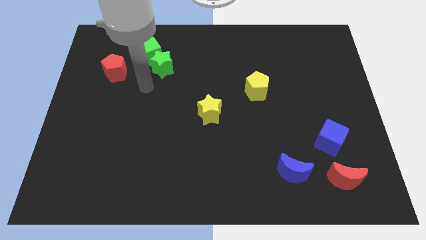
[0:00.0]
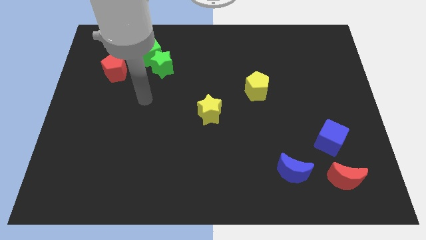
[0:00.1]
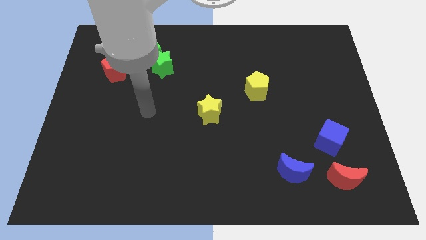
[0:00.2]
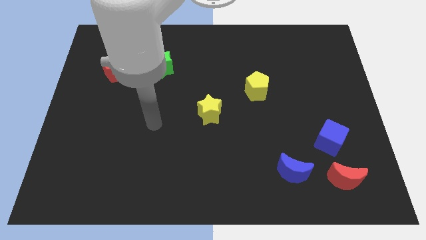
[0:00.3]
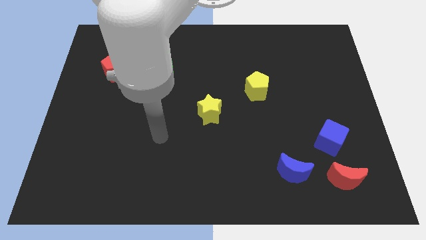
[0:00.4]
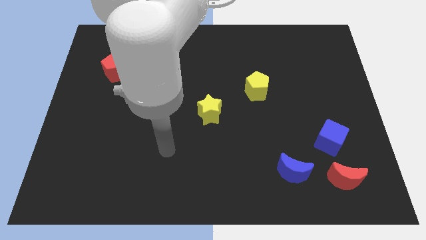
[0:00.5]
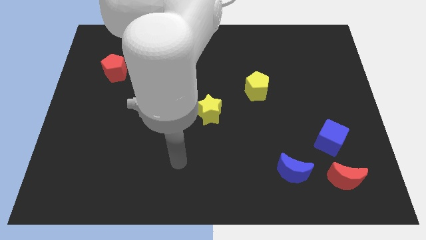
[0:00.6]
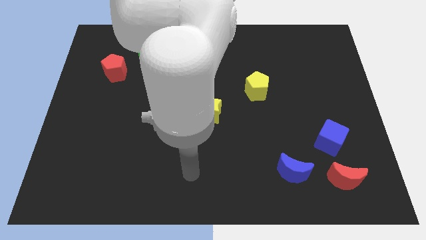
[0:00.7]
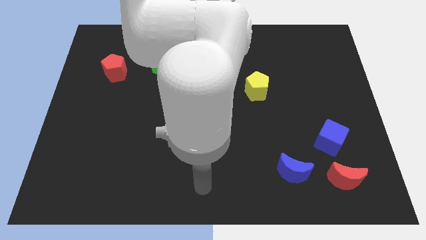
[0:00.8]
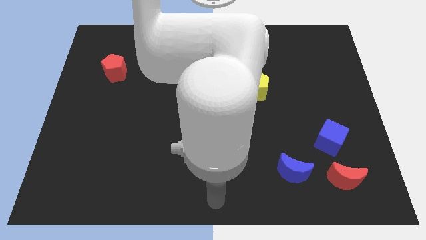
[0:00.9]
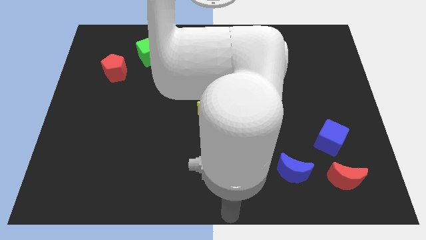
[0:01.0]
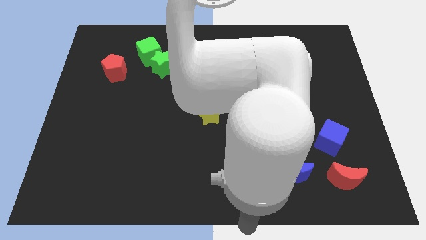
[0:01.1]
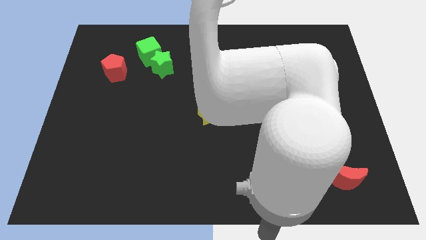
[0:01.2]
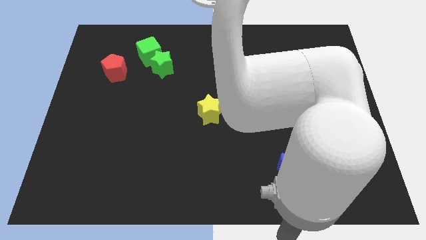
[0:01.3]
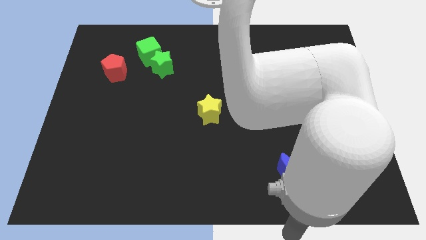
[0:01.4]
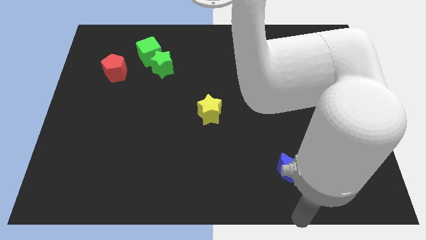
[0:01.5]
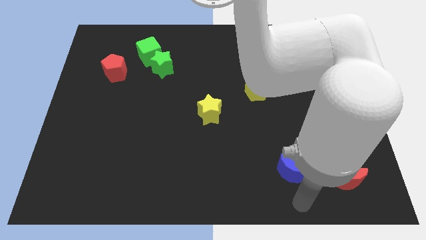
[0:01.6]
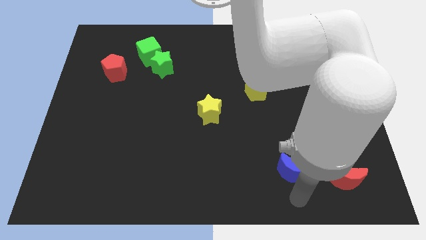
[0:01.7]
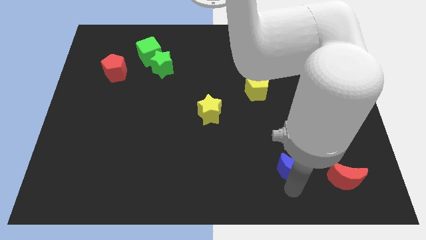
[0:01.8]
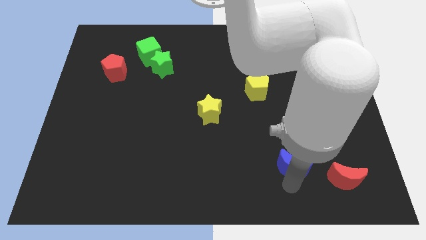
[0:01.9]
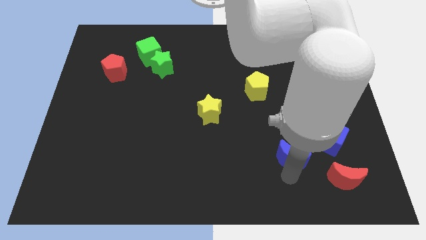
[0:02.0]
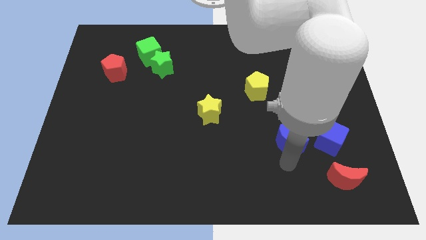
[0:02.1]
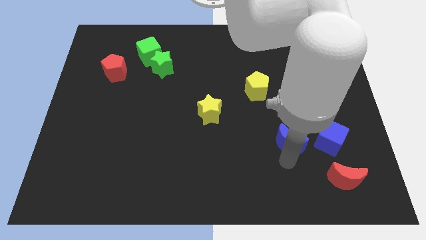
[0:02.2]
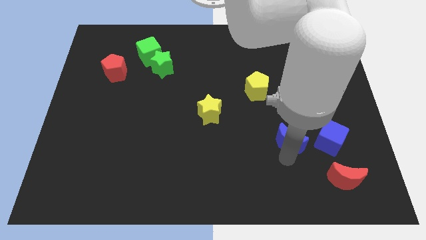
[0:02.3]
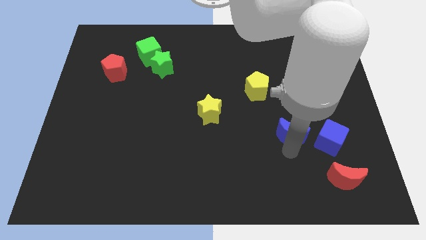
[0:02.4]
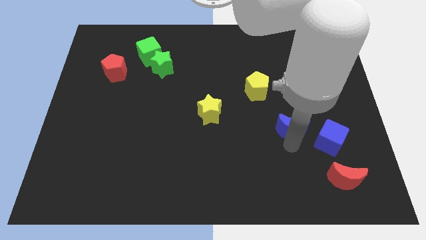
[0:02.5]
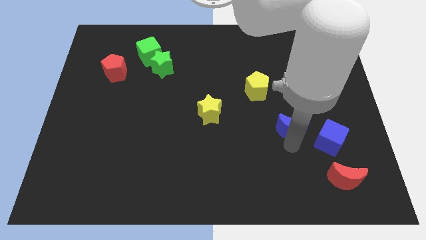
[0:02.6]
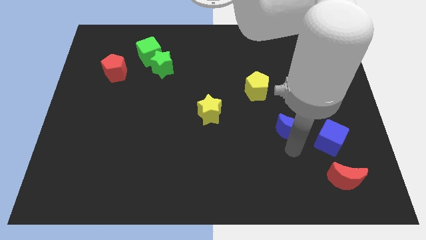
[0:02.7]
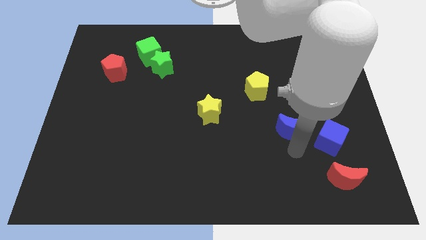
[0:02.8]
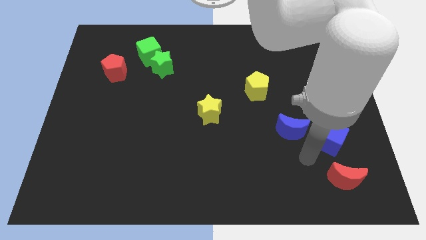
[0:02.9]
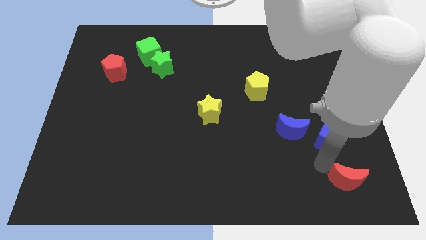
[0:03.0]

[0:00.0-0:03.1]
push the blue moon to the left side of the blue cube

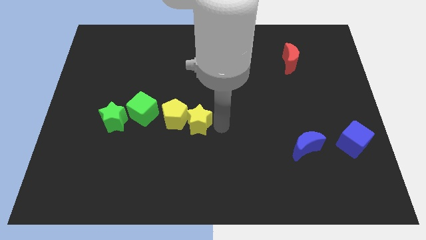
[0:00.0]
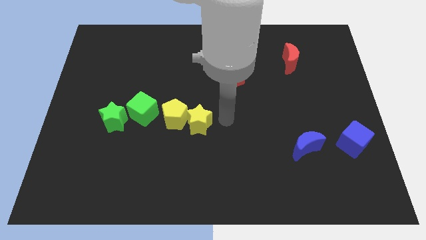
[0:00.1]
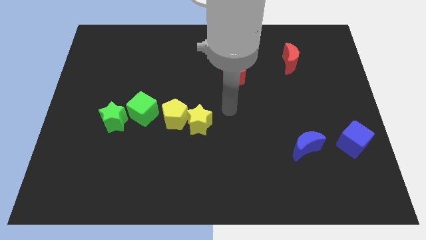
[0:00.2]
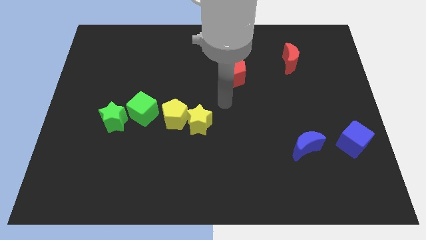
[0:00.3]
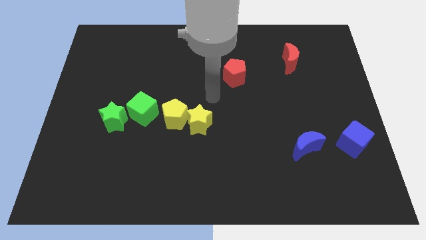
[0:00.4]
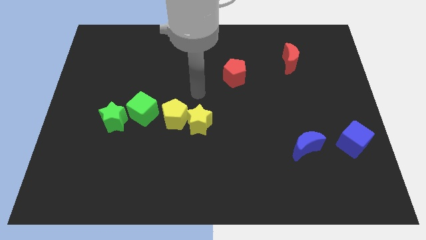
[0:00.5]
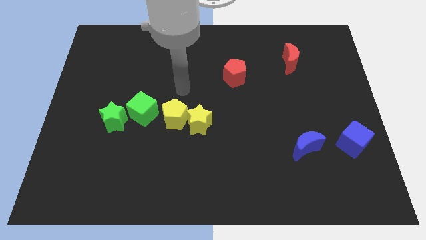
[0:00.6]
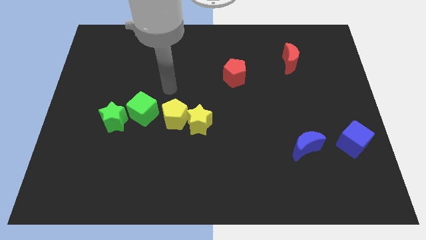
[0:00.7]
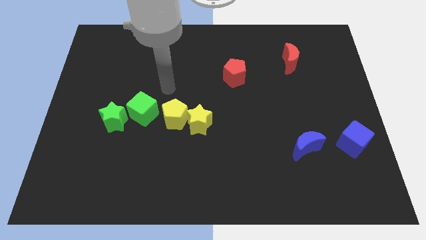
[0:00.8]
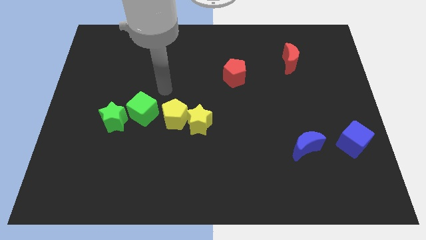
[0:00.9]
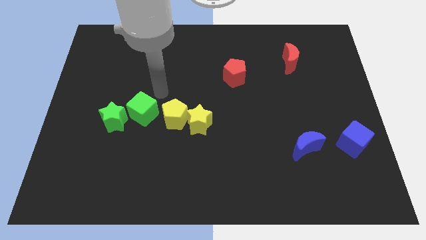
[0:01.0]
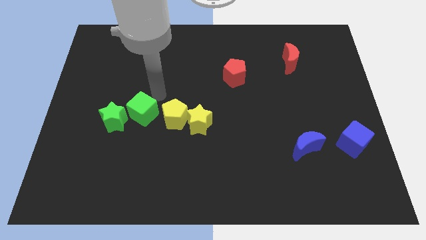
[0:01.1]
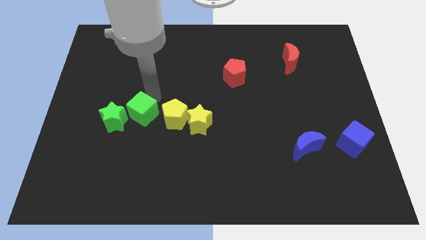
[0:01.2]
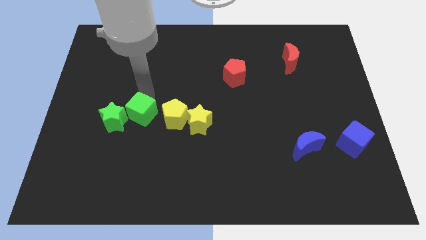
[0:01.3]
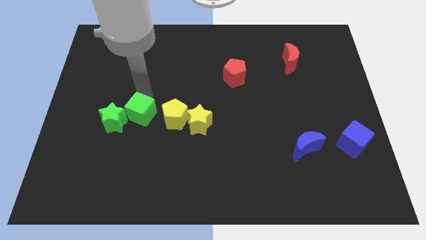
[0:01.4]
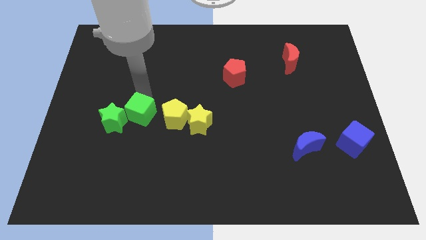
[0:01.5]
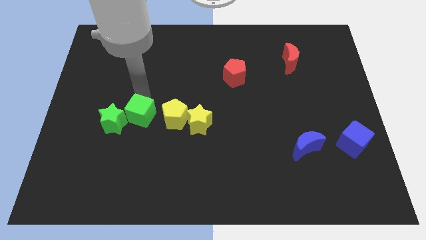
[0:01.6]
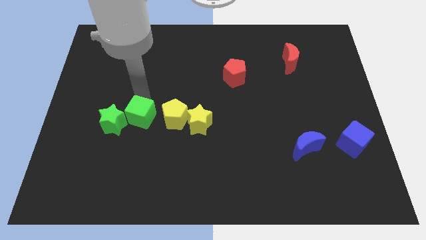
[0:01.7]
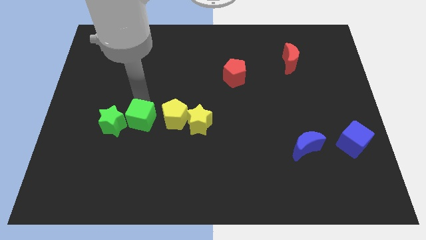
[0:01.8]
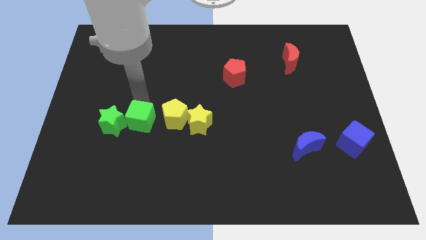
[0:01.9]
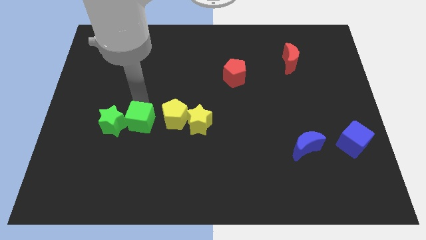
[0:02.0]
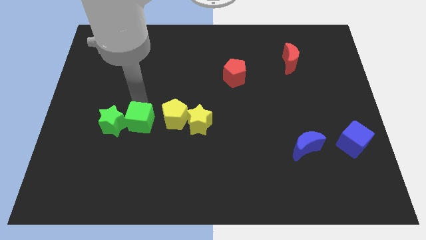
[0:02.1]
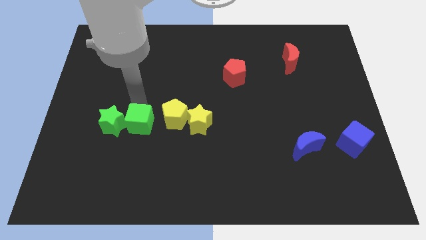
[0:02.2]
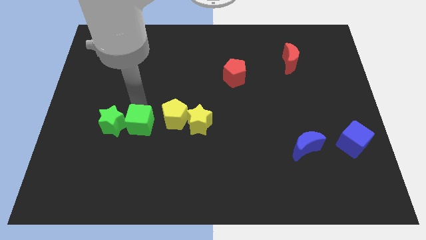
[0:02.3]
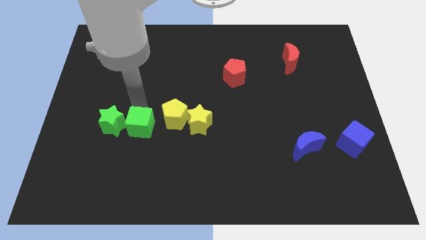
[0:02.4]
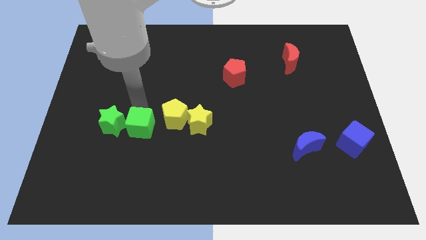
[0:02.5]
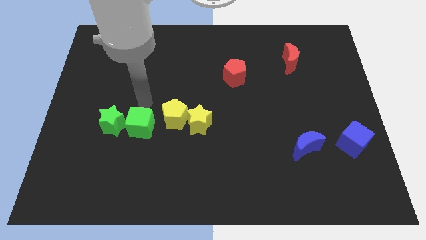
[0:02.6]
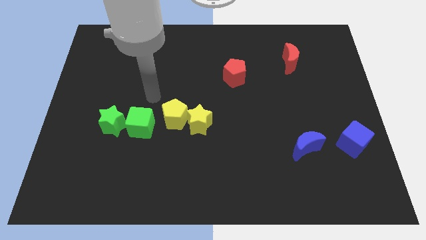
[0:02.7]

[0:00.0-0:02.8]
move green cube slightly to the down

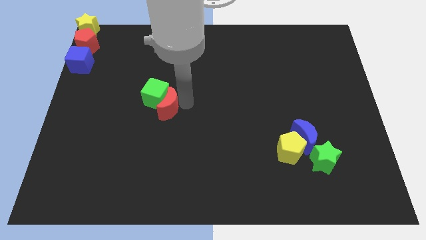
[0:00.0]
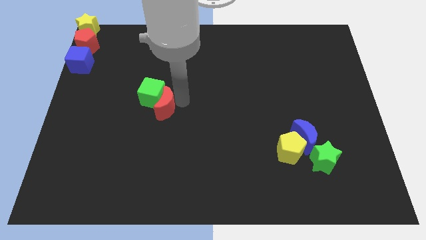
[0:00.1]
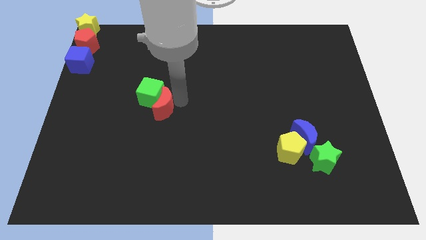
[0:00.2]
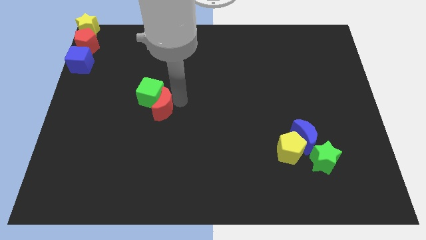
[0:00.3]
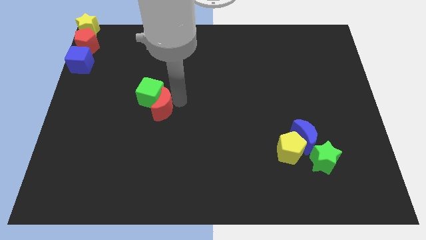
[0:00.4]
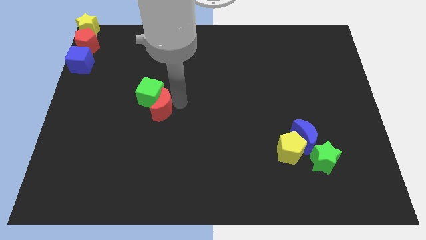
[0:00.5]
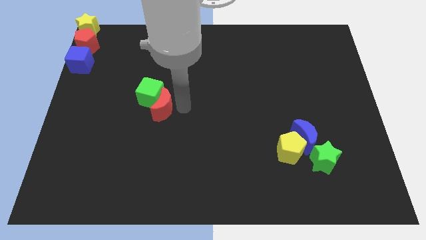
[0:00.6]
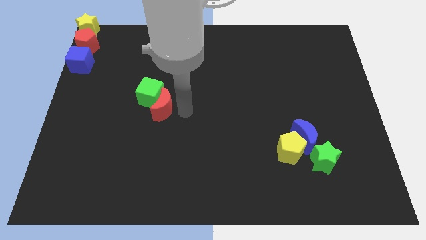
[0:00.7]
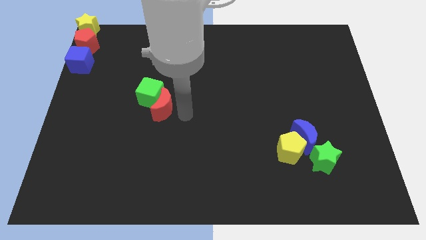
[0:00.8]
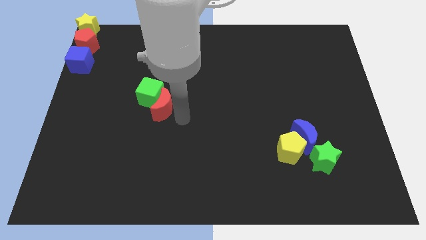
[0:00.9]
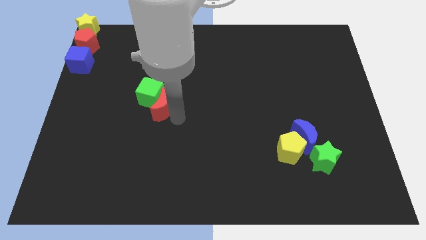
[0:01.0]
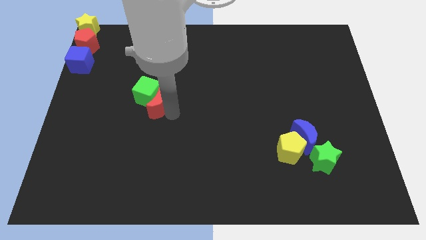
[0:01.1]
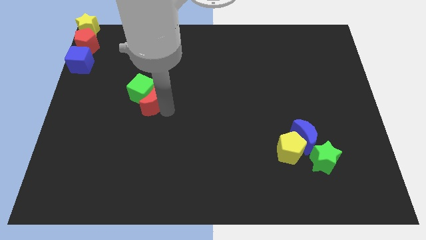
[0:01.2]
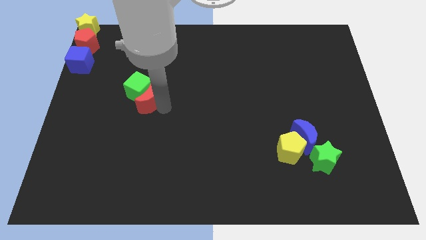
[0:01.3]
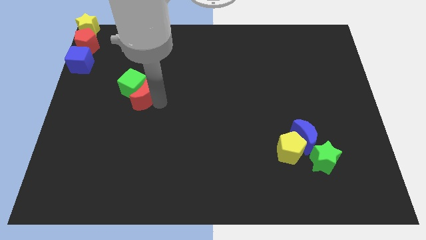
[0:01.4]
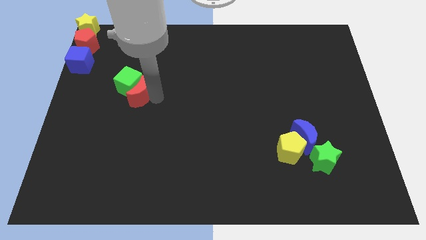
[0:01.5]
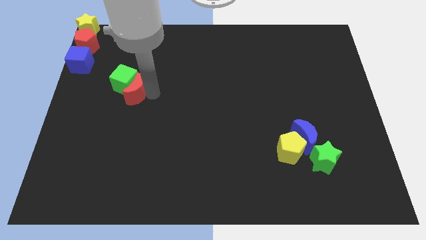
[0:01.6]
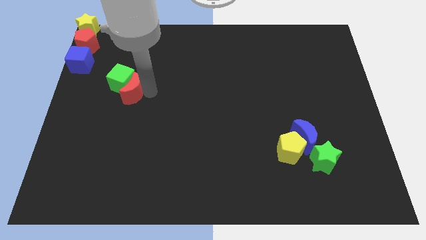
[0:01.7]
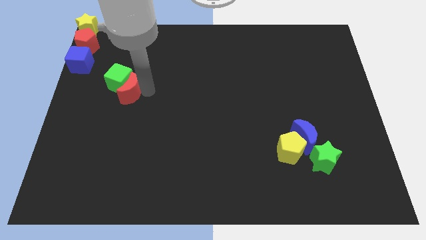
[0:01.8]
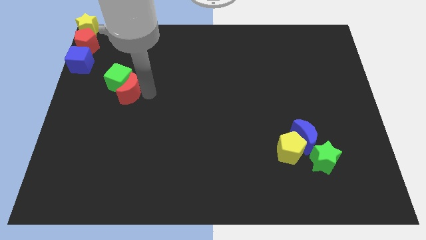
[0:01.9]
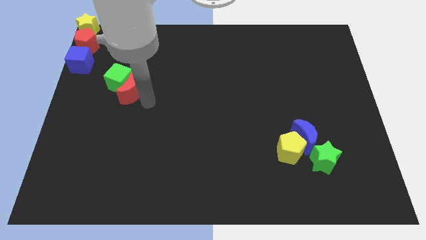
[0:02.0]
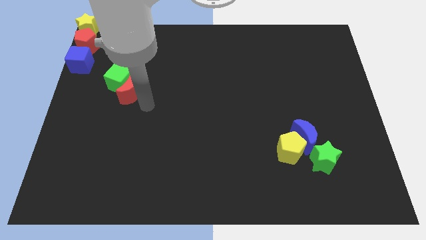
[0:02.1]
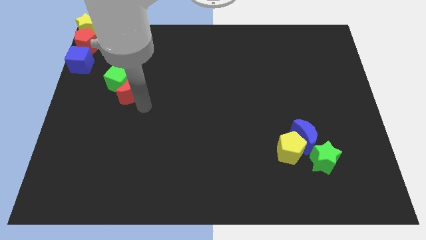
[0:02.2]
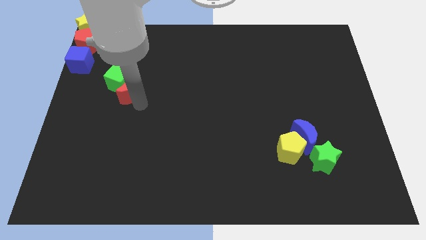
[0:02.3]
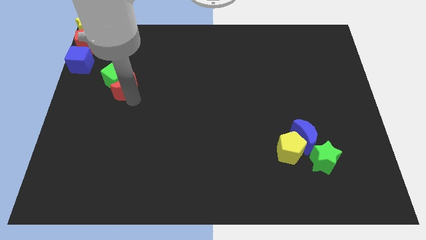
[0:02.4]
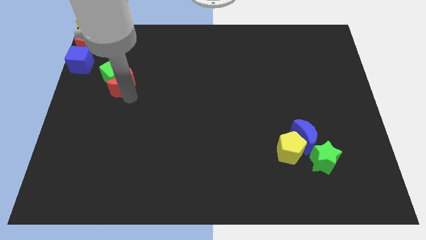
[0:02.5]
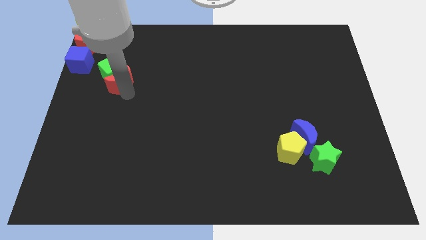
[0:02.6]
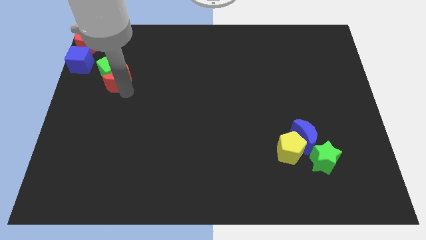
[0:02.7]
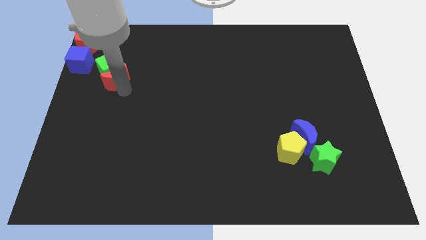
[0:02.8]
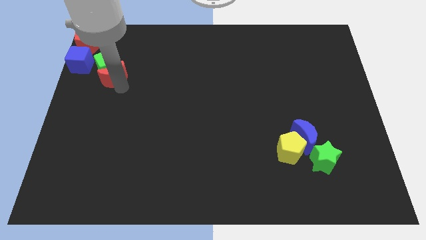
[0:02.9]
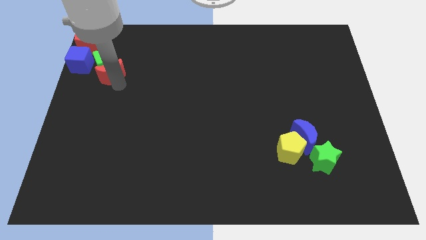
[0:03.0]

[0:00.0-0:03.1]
place the green cube to the right of the blue cube
